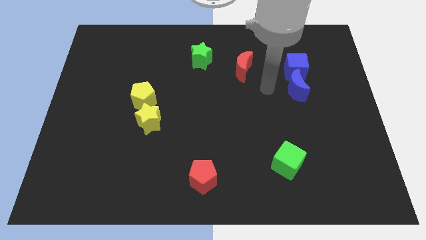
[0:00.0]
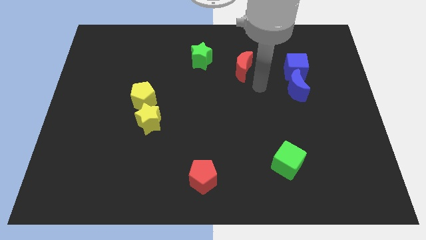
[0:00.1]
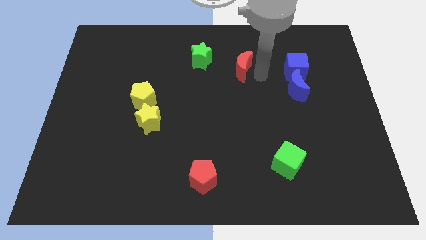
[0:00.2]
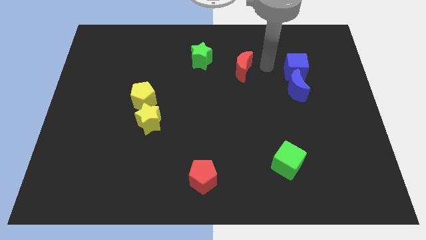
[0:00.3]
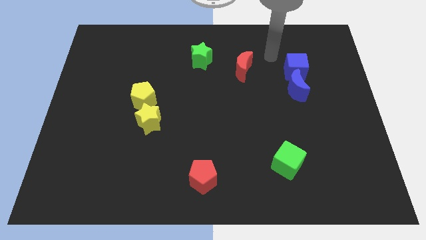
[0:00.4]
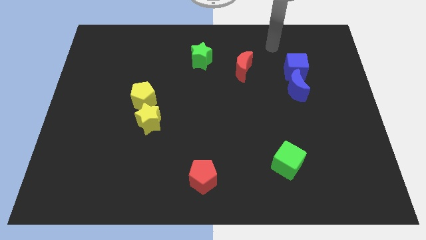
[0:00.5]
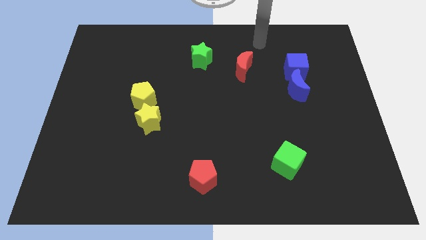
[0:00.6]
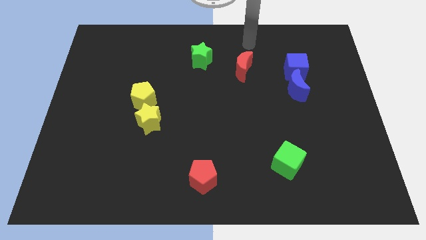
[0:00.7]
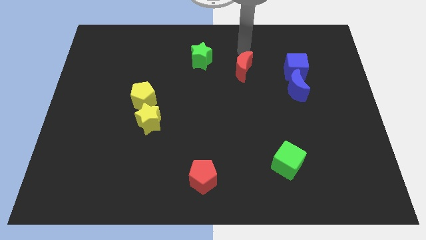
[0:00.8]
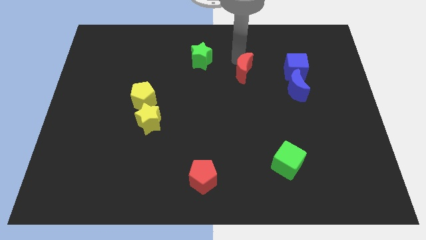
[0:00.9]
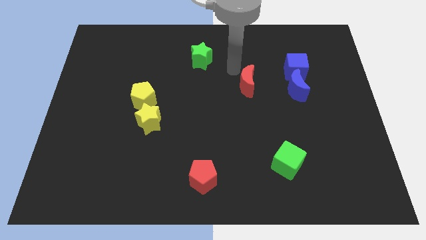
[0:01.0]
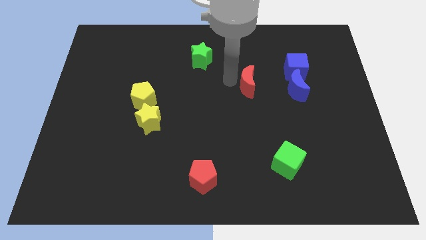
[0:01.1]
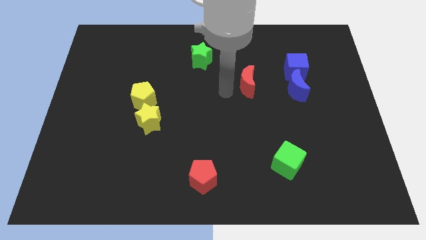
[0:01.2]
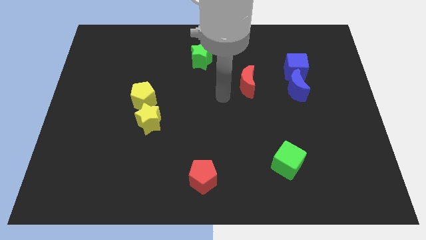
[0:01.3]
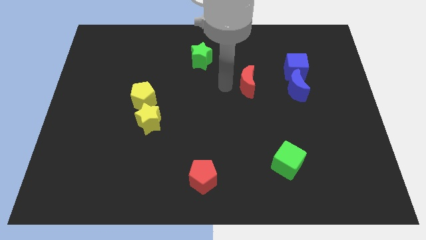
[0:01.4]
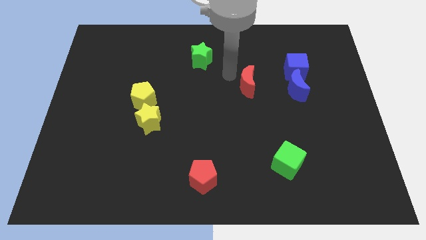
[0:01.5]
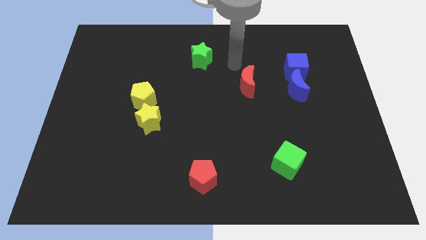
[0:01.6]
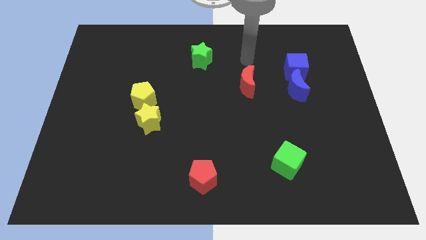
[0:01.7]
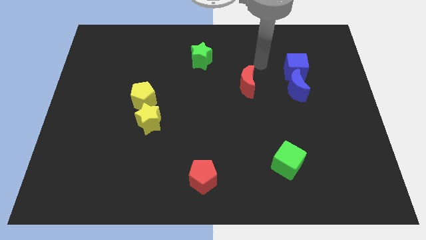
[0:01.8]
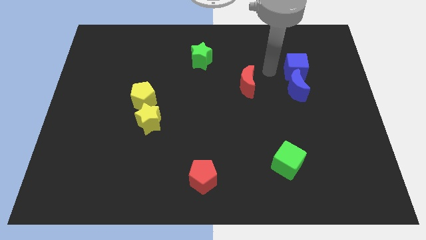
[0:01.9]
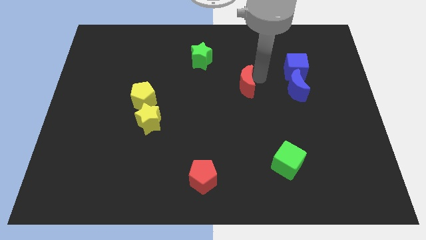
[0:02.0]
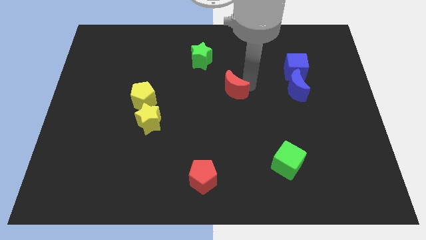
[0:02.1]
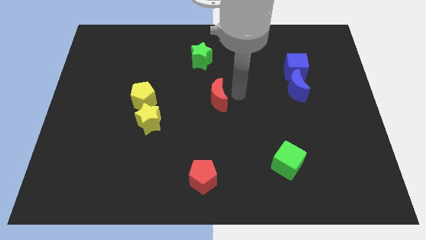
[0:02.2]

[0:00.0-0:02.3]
push the red moon to the bottom right side of the green star

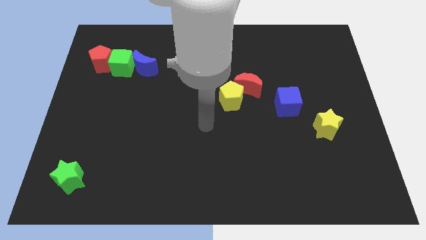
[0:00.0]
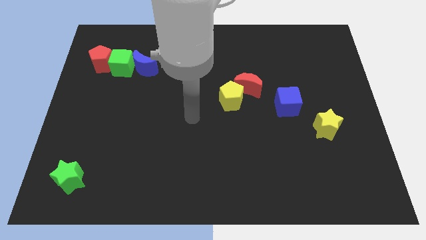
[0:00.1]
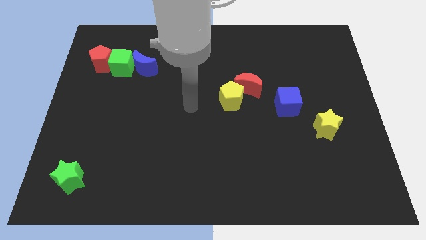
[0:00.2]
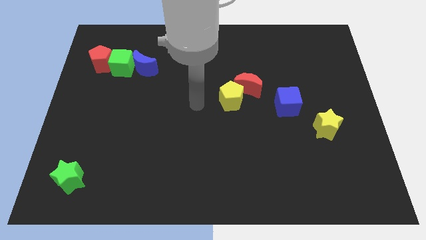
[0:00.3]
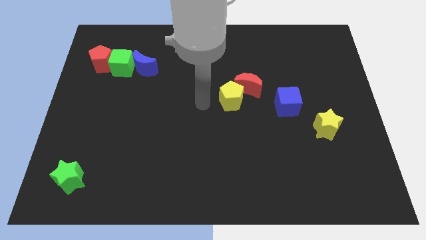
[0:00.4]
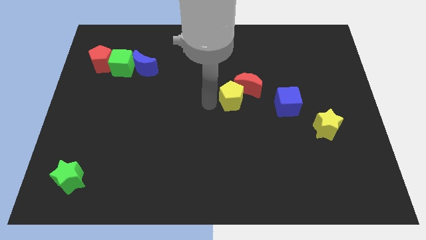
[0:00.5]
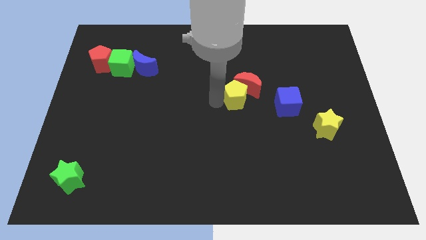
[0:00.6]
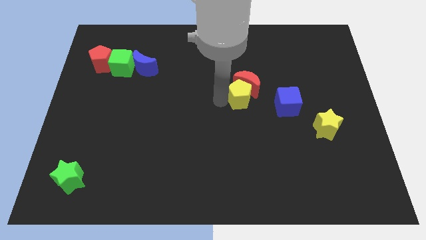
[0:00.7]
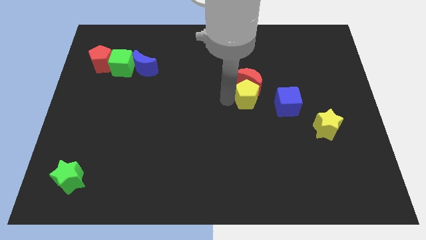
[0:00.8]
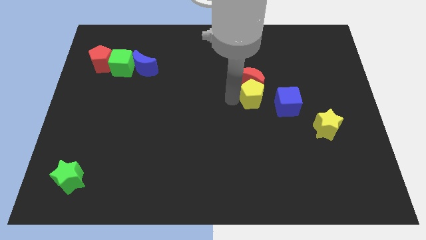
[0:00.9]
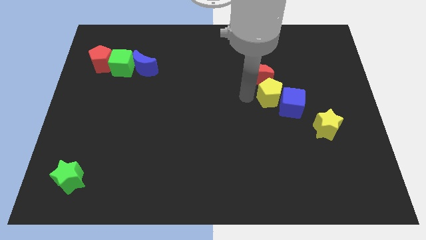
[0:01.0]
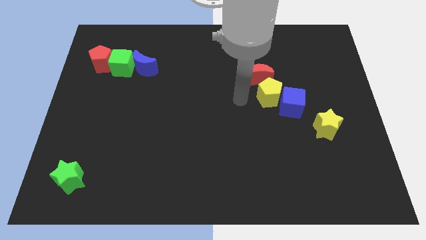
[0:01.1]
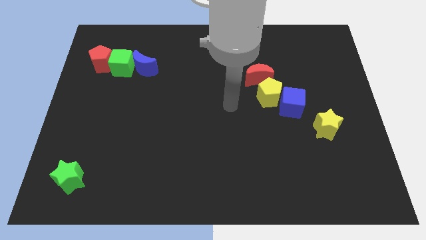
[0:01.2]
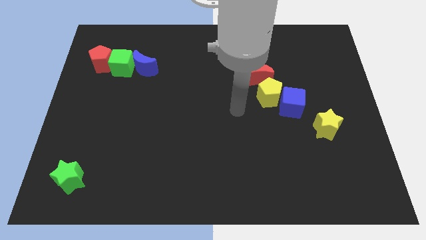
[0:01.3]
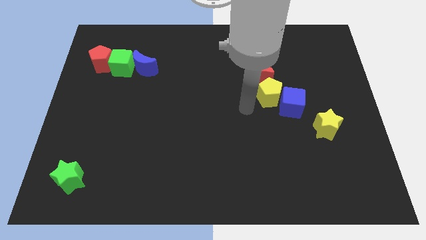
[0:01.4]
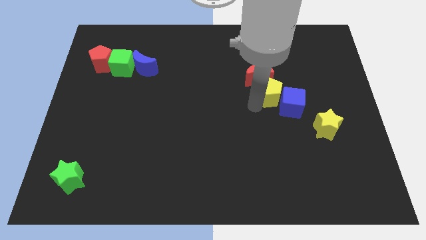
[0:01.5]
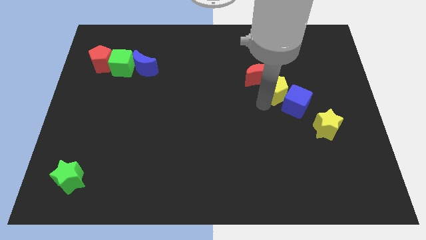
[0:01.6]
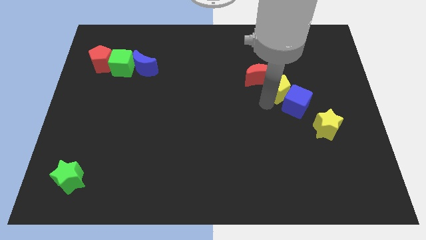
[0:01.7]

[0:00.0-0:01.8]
move yellow pentagon diagonally to the blue cube

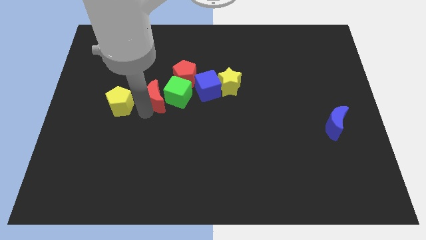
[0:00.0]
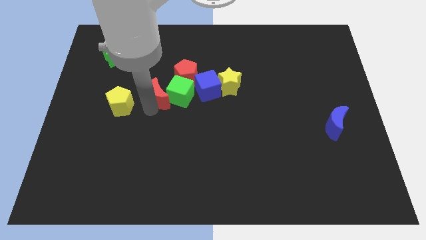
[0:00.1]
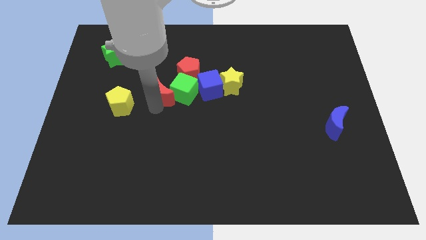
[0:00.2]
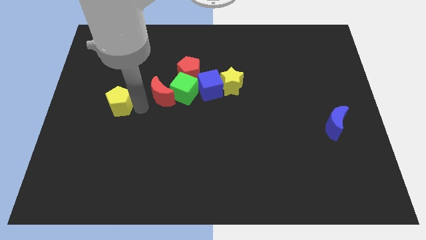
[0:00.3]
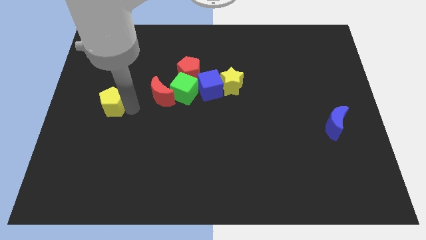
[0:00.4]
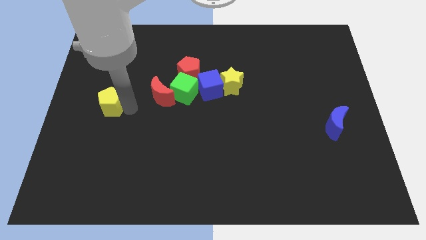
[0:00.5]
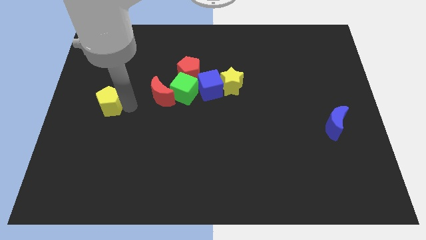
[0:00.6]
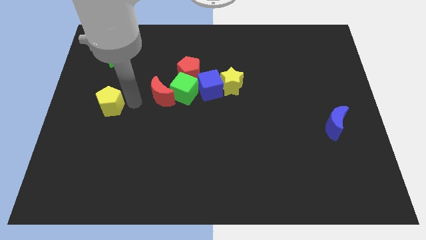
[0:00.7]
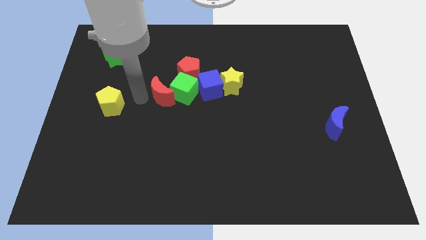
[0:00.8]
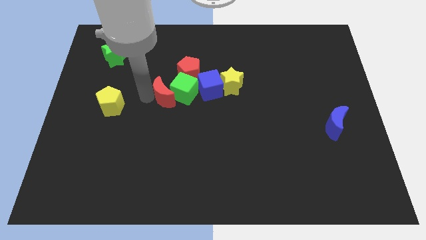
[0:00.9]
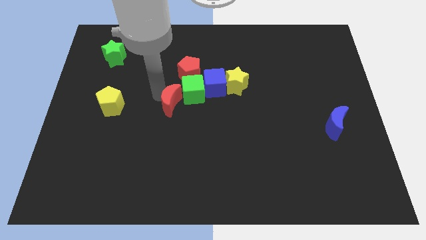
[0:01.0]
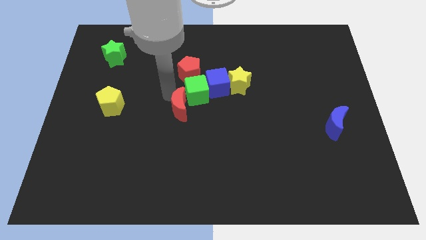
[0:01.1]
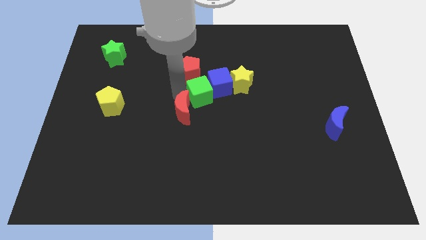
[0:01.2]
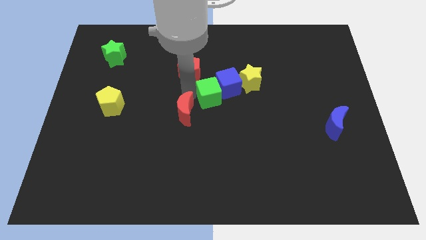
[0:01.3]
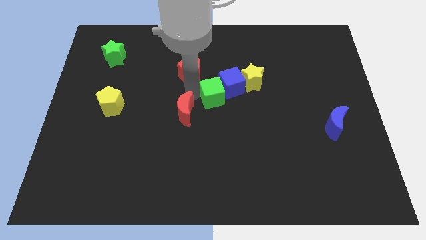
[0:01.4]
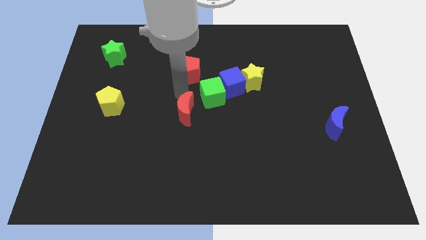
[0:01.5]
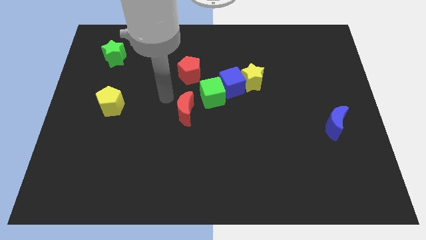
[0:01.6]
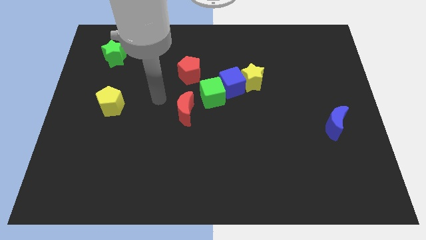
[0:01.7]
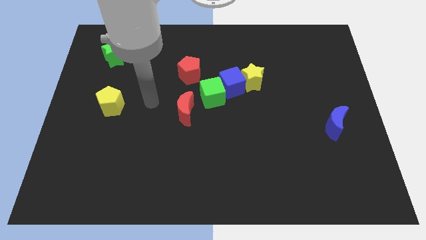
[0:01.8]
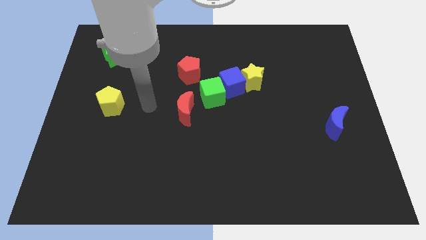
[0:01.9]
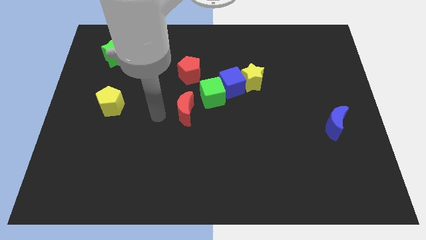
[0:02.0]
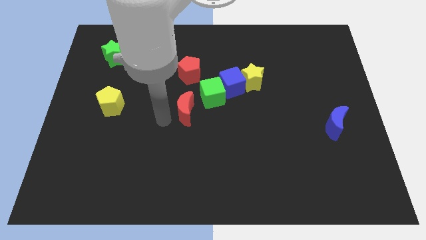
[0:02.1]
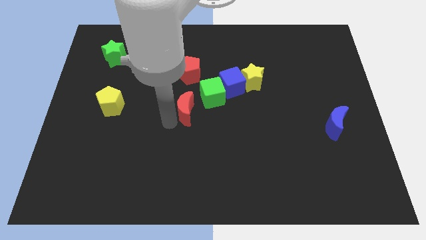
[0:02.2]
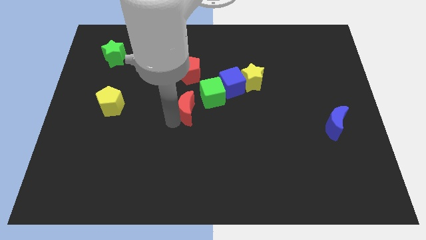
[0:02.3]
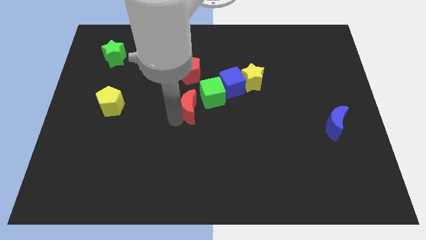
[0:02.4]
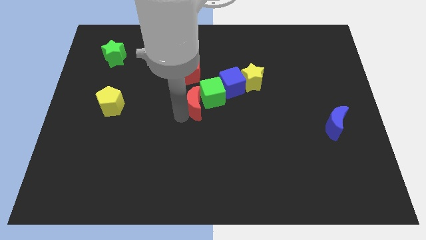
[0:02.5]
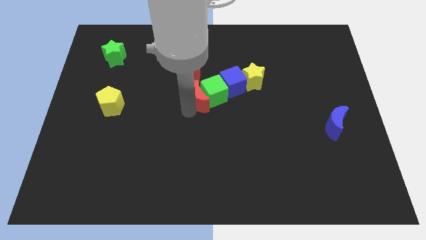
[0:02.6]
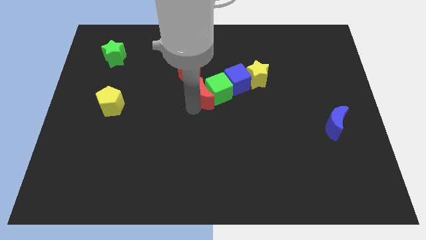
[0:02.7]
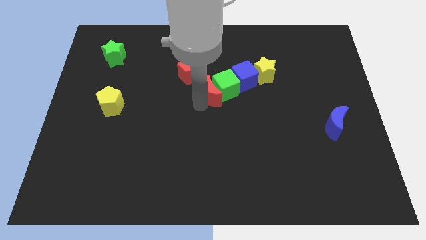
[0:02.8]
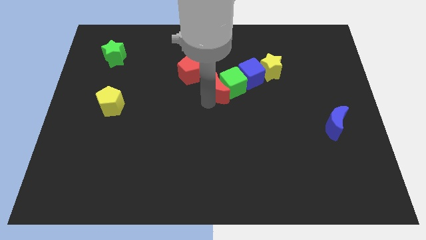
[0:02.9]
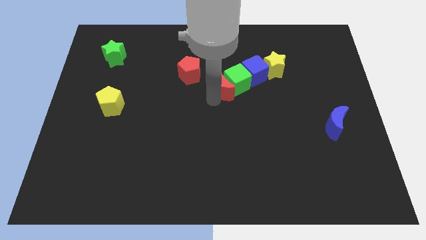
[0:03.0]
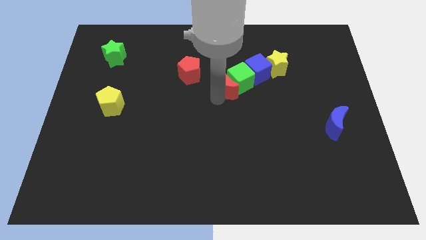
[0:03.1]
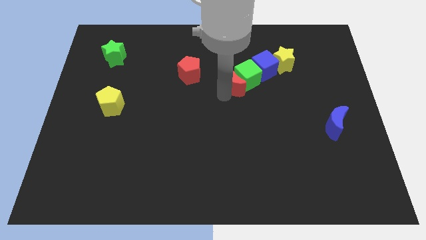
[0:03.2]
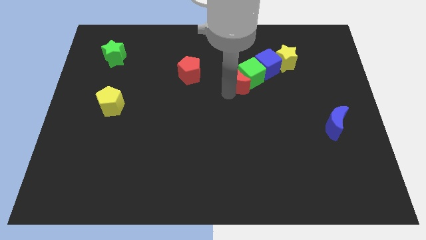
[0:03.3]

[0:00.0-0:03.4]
push red moon along with other blocks towards top right

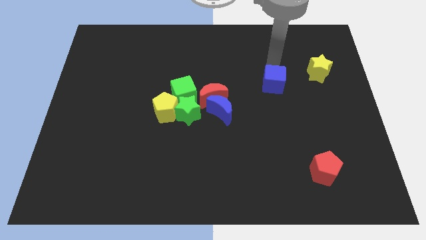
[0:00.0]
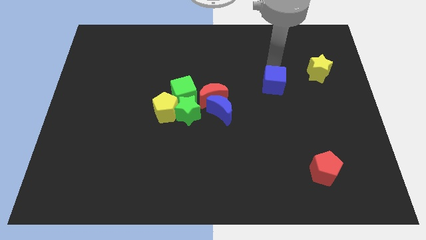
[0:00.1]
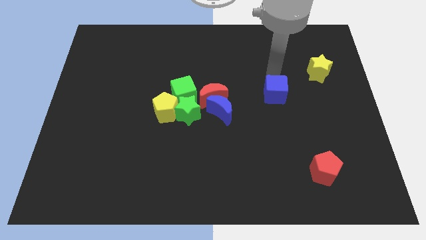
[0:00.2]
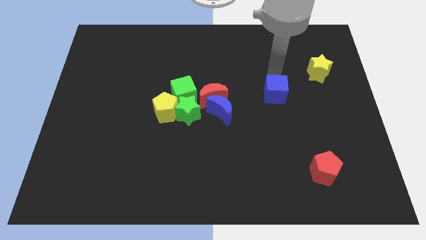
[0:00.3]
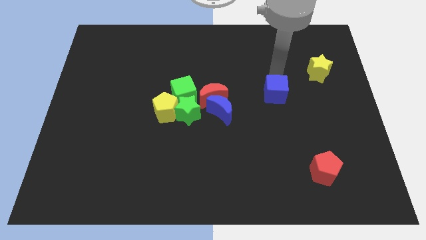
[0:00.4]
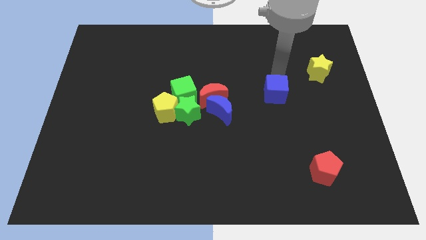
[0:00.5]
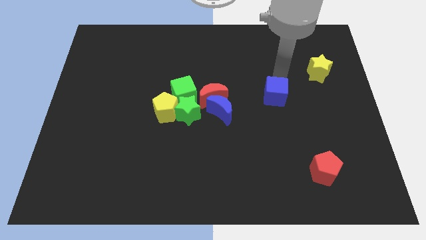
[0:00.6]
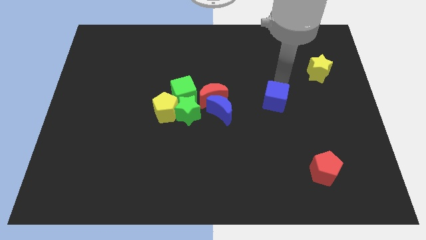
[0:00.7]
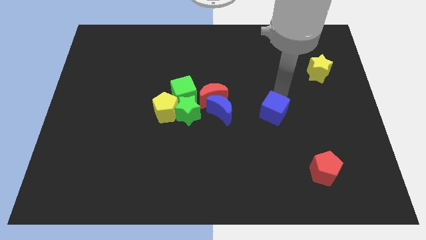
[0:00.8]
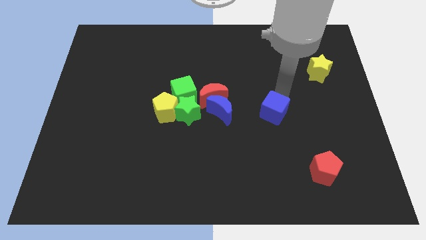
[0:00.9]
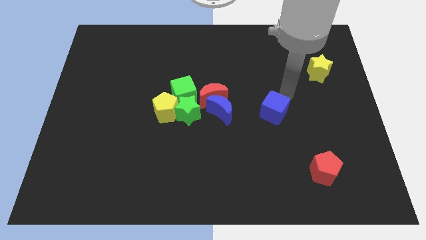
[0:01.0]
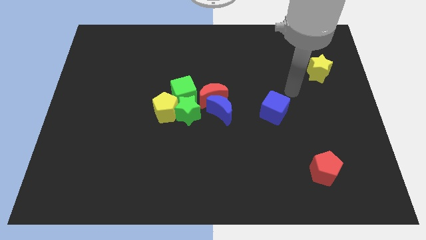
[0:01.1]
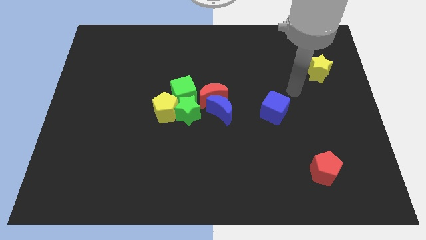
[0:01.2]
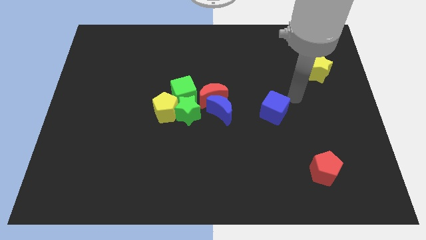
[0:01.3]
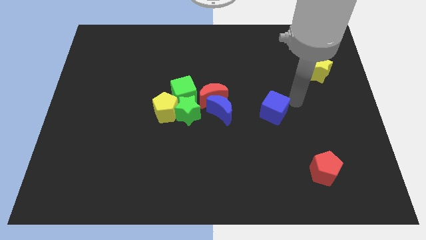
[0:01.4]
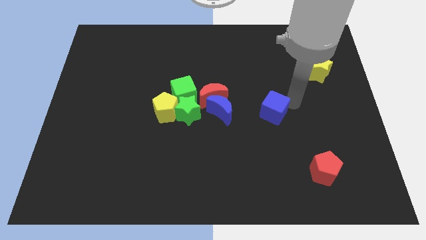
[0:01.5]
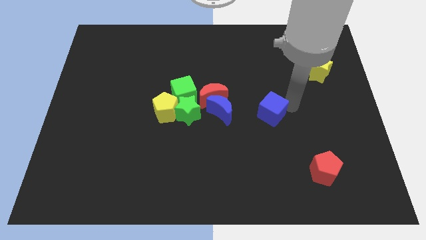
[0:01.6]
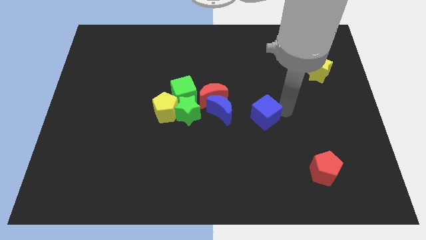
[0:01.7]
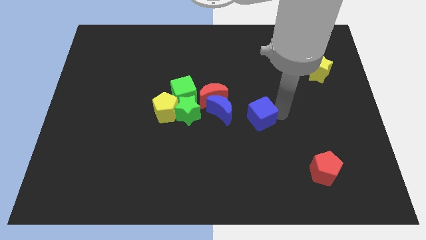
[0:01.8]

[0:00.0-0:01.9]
push the blue cube to the right of the blue crescent
